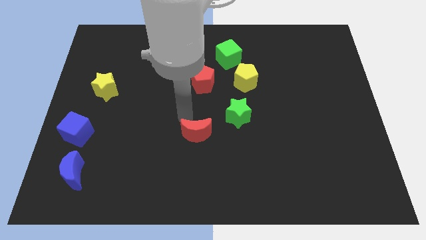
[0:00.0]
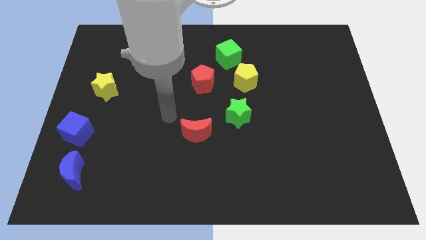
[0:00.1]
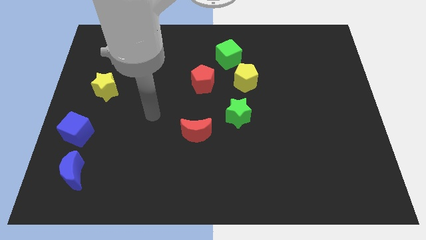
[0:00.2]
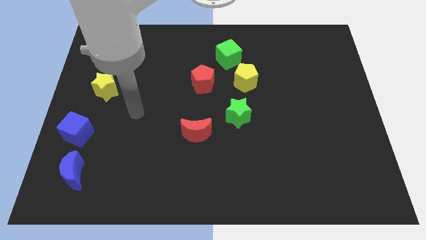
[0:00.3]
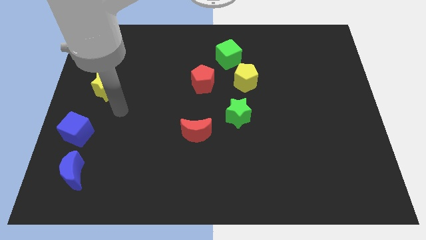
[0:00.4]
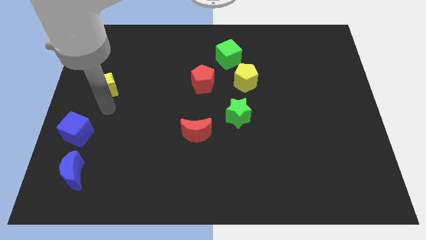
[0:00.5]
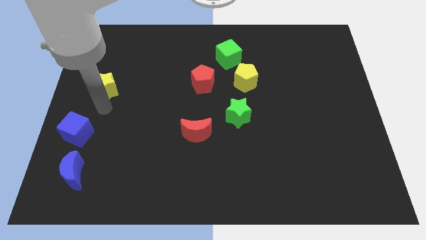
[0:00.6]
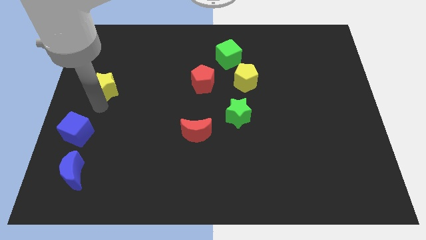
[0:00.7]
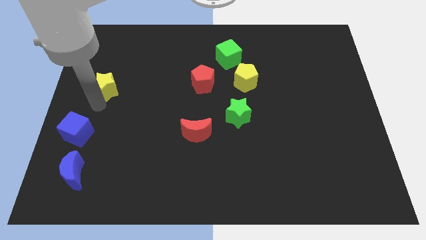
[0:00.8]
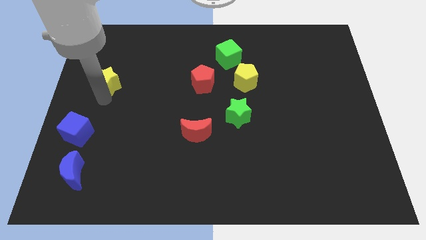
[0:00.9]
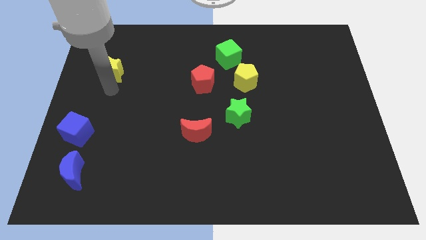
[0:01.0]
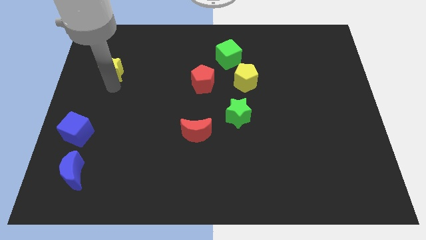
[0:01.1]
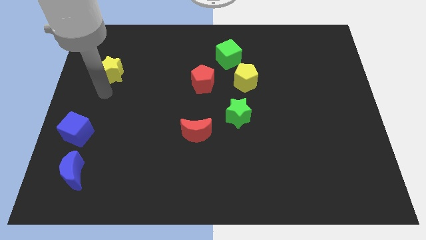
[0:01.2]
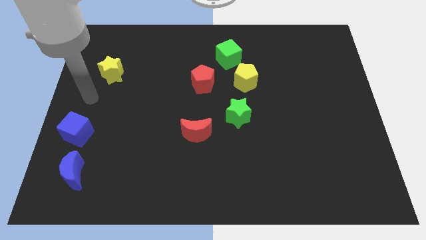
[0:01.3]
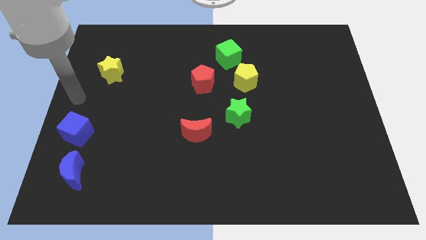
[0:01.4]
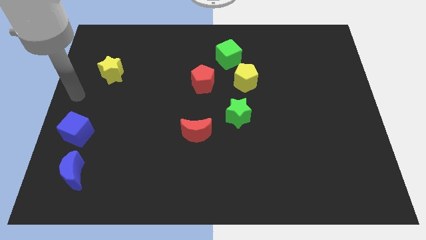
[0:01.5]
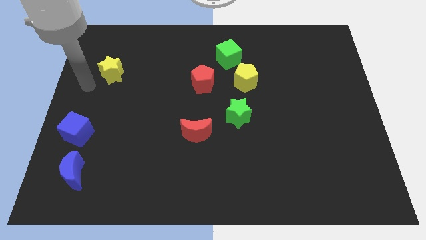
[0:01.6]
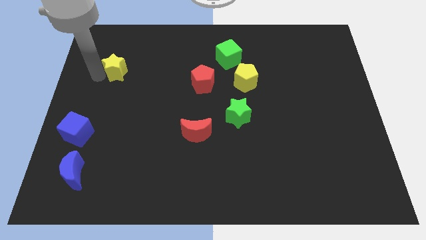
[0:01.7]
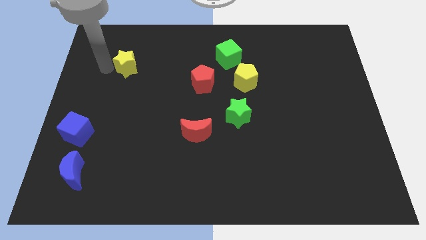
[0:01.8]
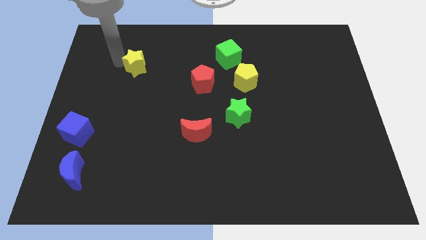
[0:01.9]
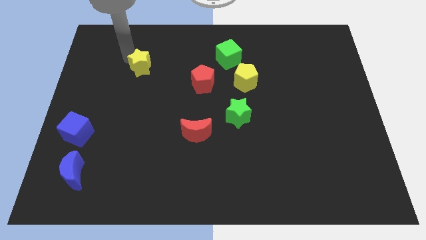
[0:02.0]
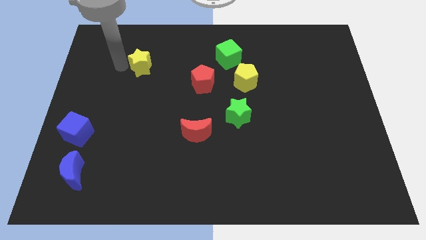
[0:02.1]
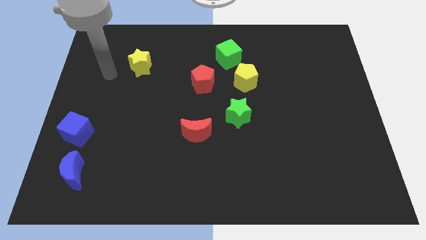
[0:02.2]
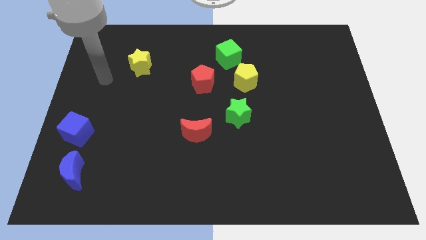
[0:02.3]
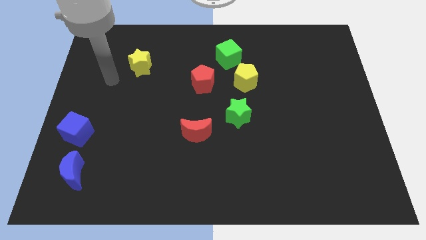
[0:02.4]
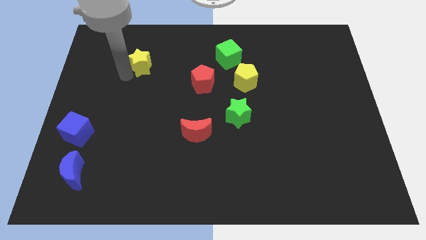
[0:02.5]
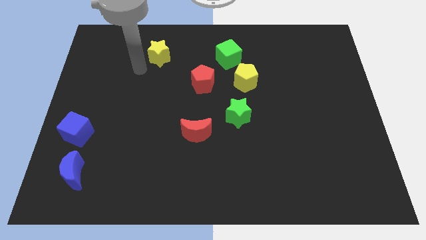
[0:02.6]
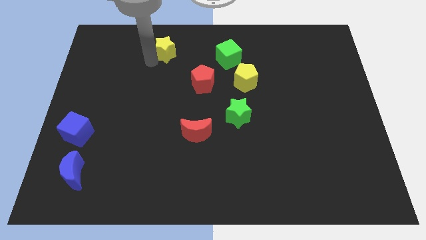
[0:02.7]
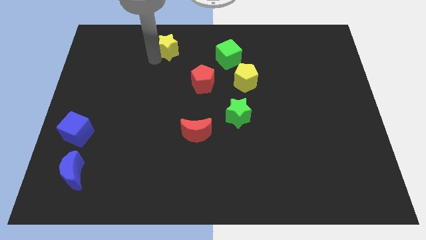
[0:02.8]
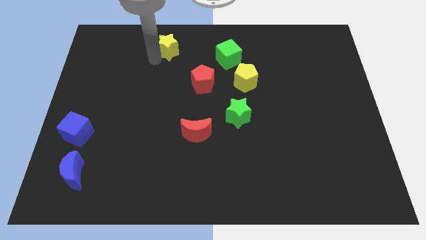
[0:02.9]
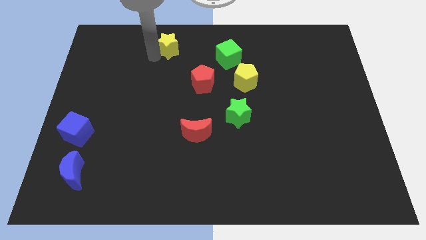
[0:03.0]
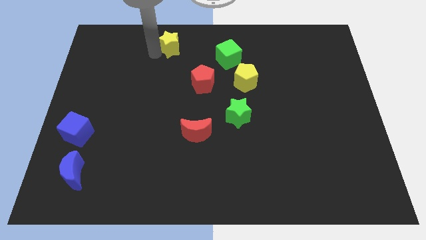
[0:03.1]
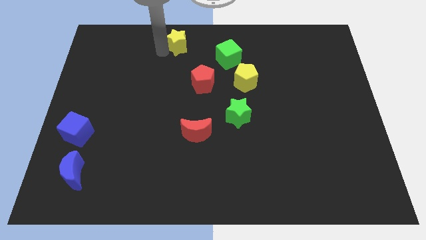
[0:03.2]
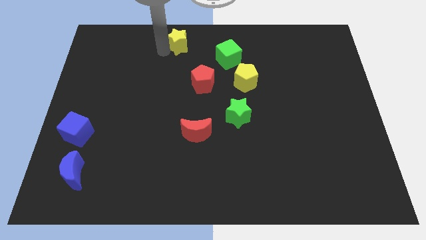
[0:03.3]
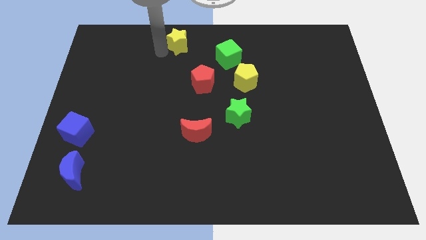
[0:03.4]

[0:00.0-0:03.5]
place the yellow star towards the top center of the board

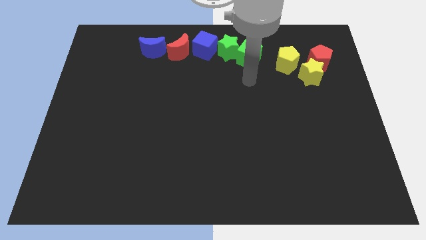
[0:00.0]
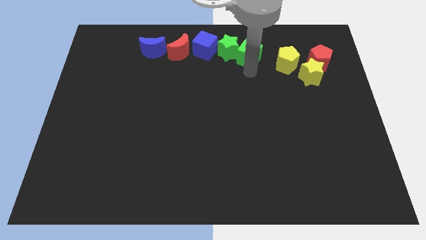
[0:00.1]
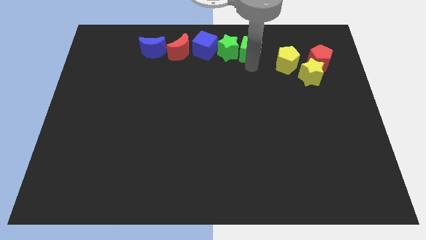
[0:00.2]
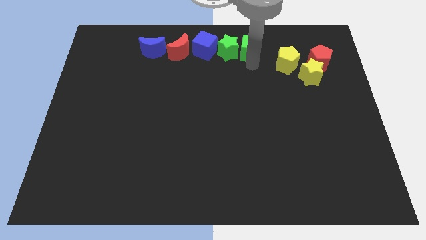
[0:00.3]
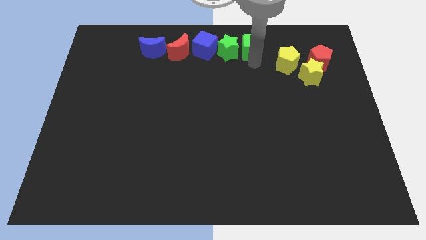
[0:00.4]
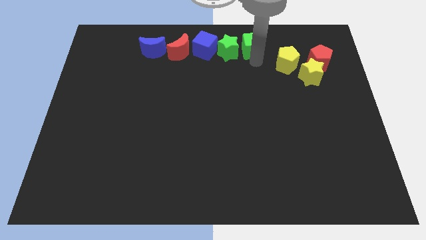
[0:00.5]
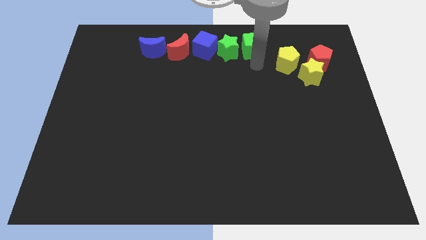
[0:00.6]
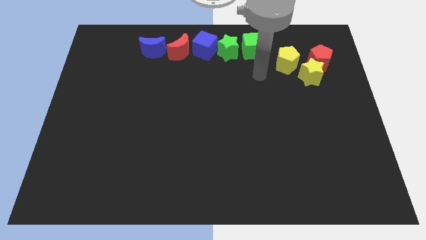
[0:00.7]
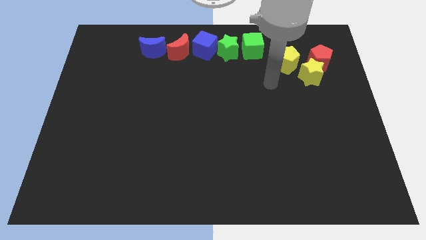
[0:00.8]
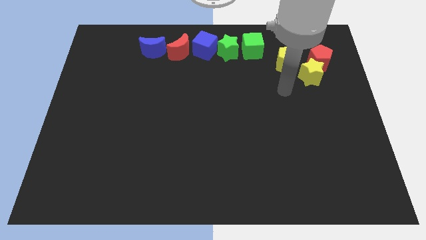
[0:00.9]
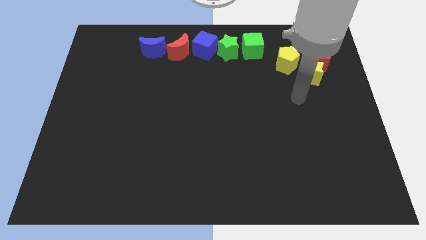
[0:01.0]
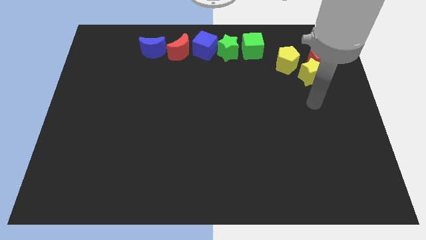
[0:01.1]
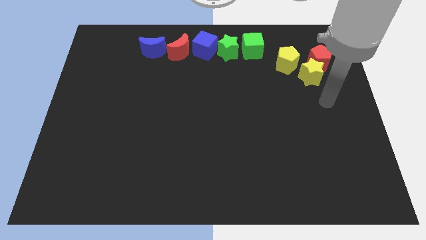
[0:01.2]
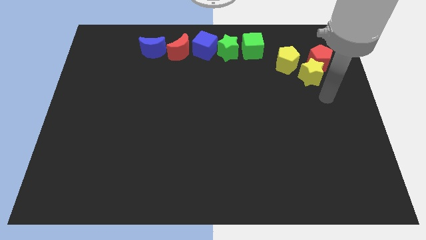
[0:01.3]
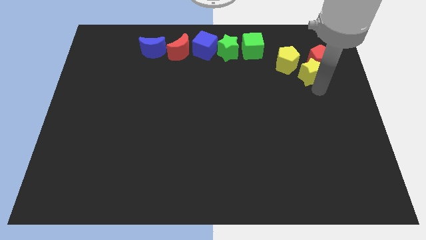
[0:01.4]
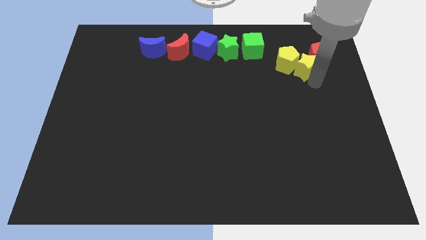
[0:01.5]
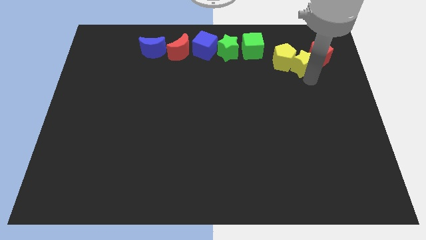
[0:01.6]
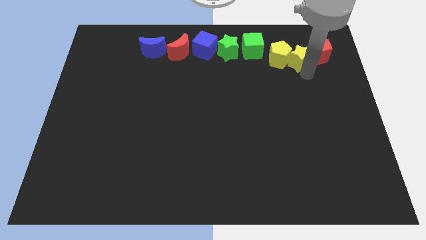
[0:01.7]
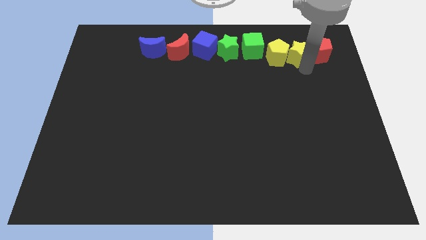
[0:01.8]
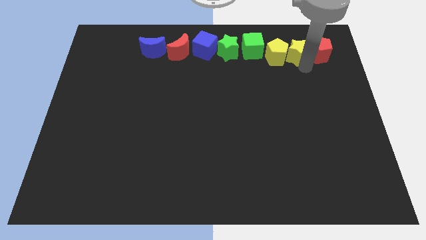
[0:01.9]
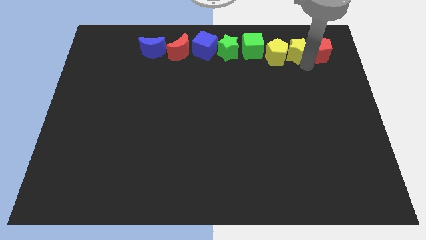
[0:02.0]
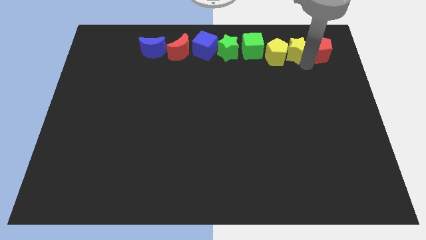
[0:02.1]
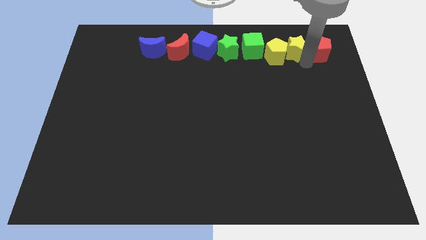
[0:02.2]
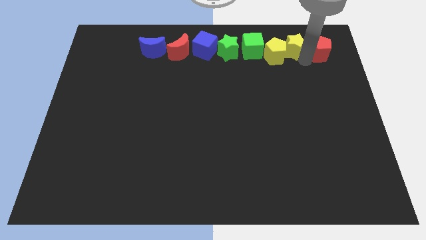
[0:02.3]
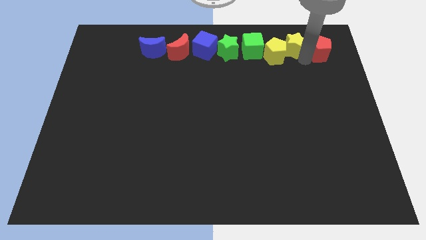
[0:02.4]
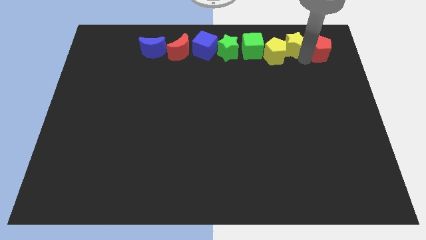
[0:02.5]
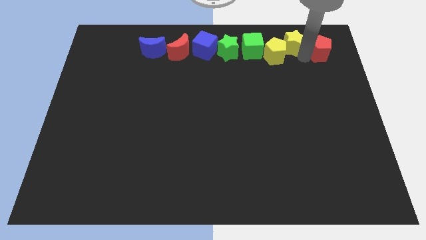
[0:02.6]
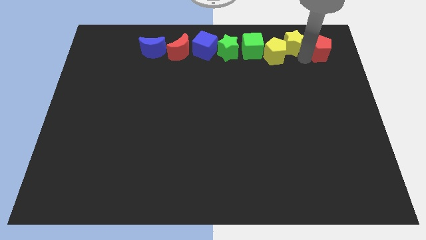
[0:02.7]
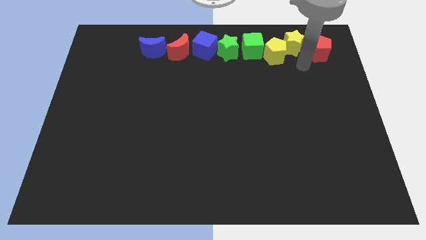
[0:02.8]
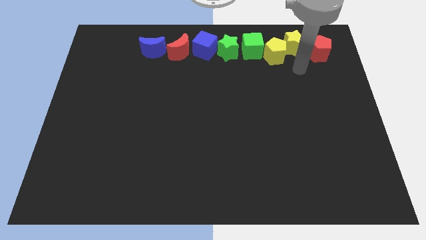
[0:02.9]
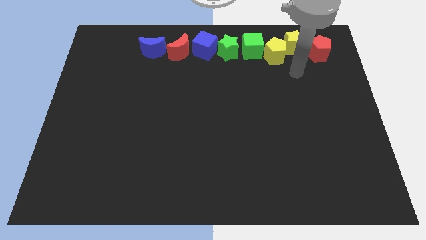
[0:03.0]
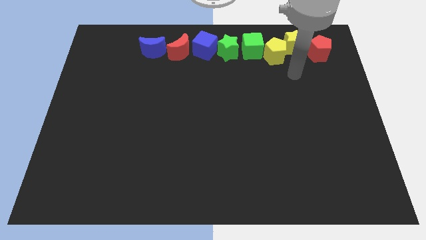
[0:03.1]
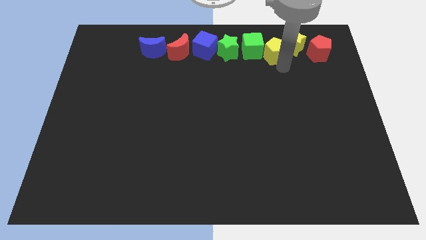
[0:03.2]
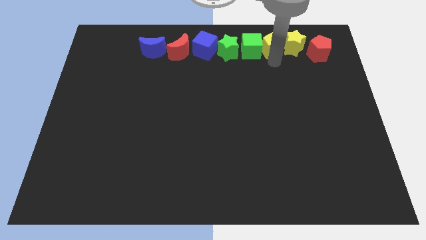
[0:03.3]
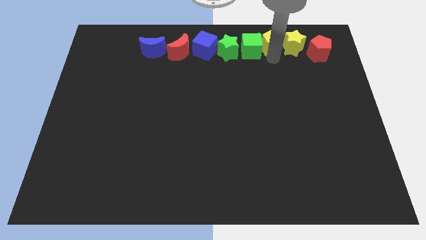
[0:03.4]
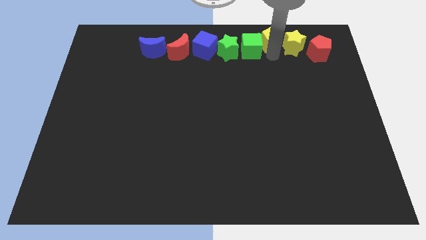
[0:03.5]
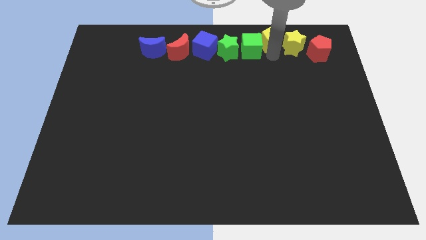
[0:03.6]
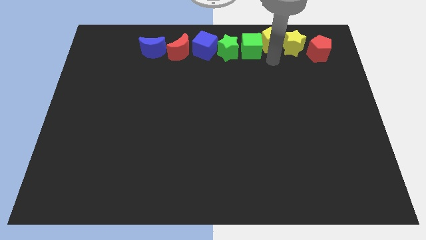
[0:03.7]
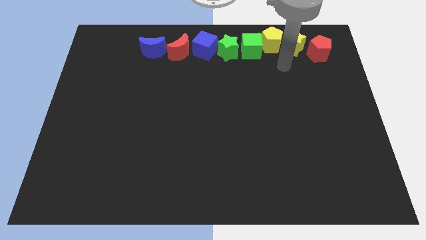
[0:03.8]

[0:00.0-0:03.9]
slightly push the yellow pentagon in between the yellow star and green cube

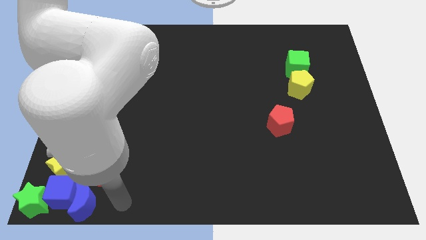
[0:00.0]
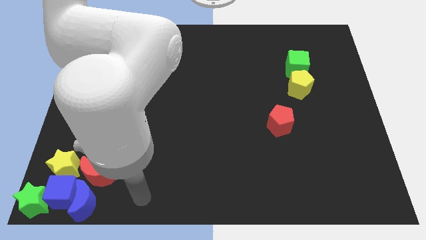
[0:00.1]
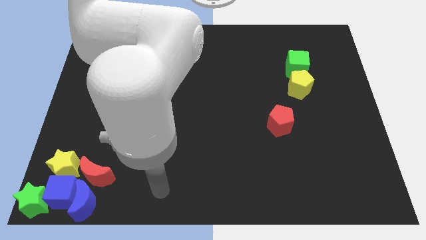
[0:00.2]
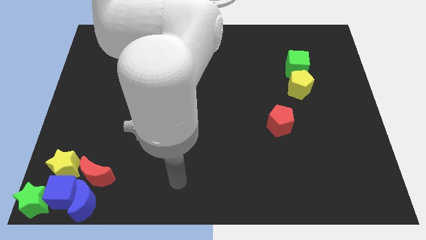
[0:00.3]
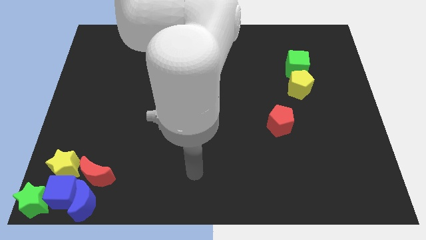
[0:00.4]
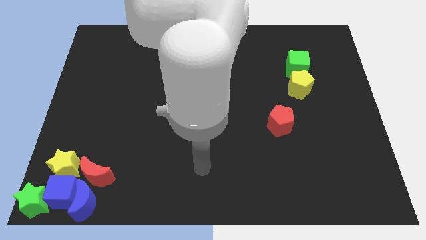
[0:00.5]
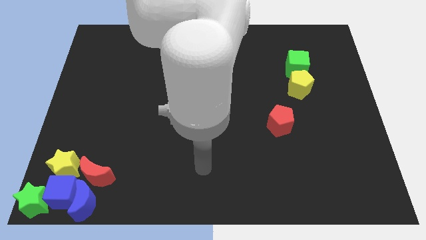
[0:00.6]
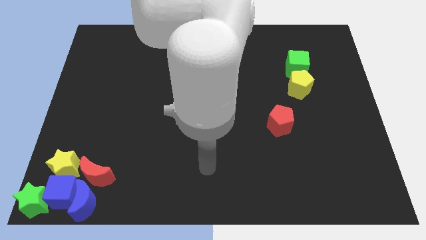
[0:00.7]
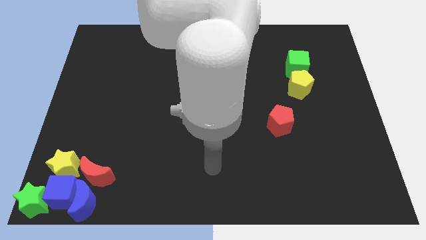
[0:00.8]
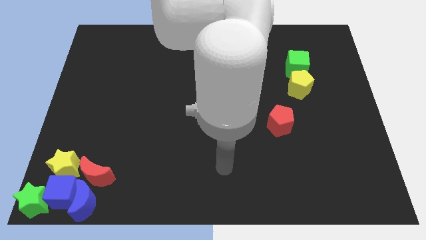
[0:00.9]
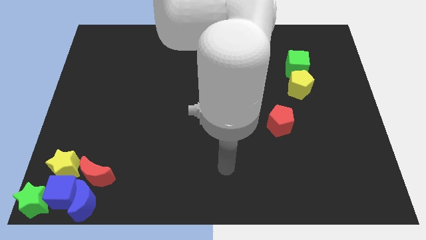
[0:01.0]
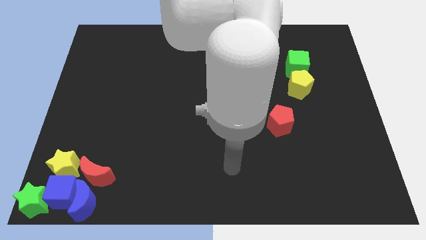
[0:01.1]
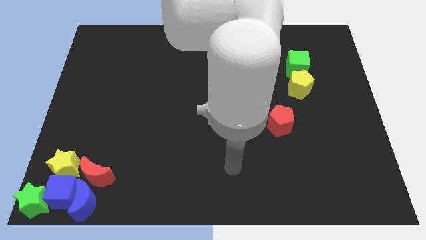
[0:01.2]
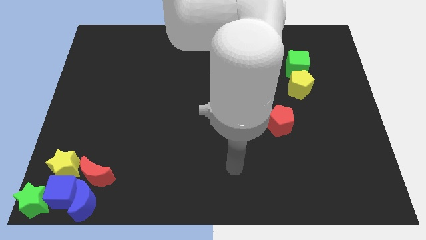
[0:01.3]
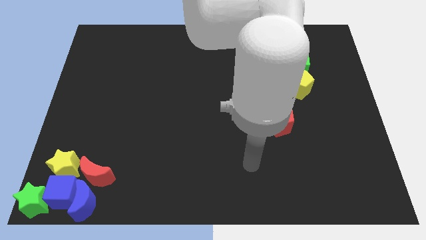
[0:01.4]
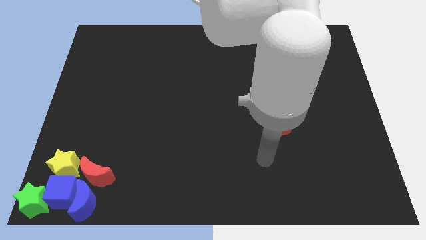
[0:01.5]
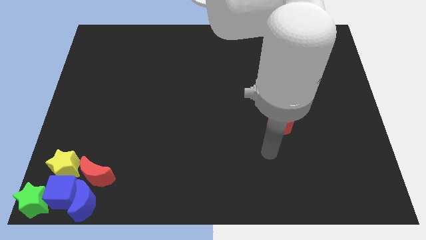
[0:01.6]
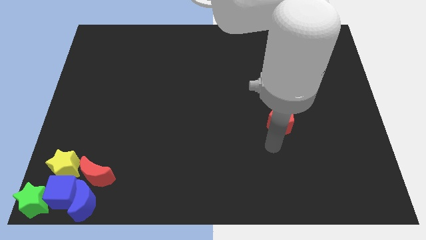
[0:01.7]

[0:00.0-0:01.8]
move your arm away from blue moon
